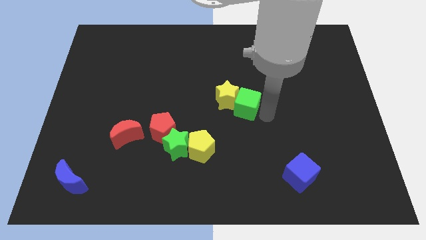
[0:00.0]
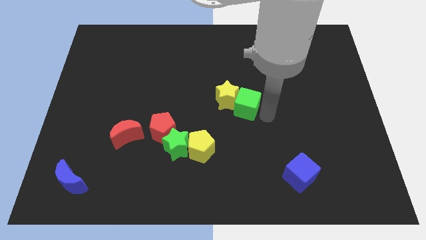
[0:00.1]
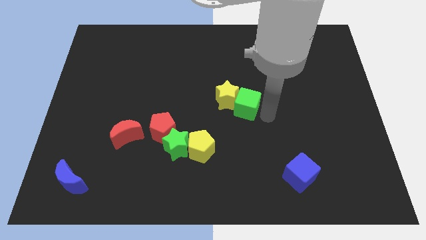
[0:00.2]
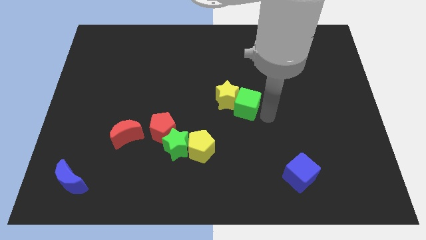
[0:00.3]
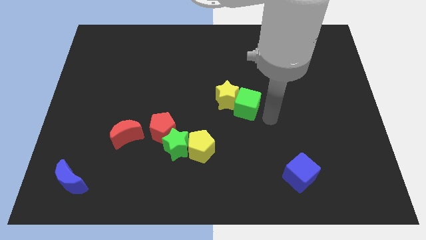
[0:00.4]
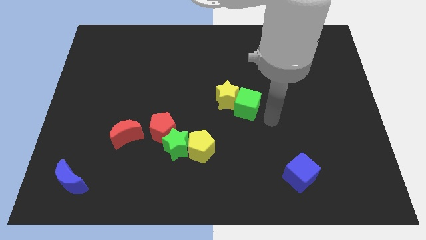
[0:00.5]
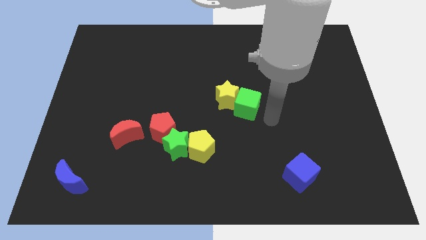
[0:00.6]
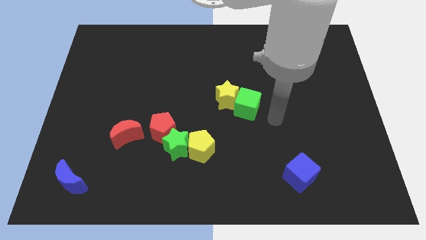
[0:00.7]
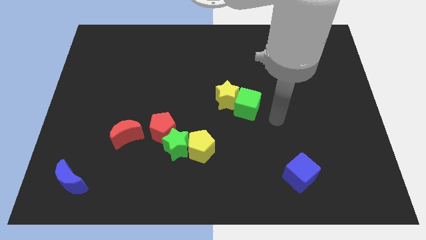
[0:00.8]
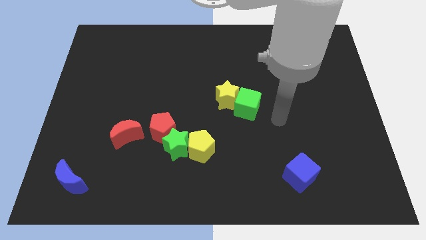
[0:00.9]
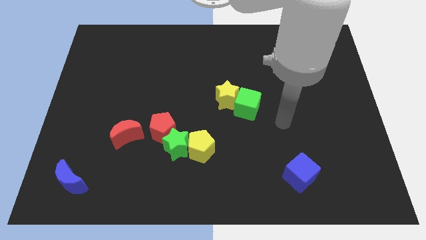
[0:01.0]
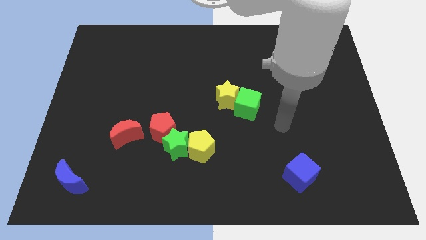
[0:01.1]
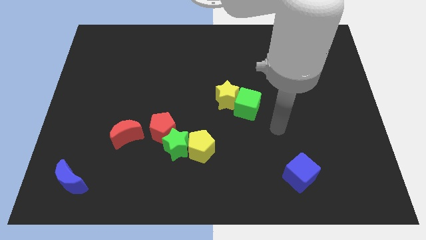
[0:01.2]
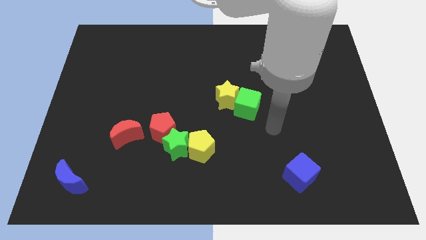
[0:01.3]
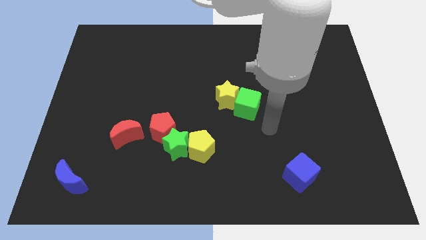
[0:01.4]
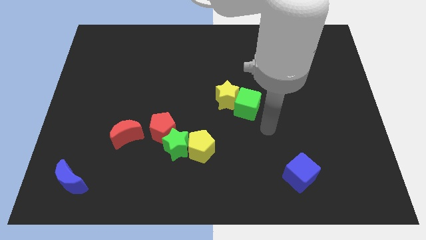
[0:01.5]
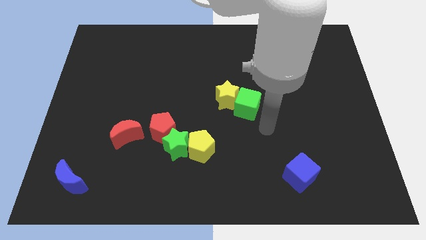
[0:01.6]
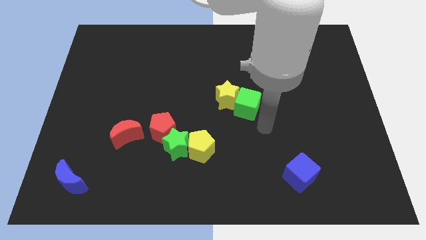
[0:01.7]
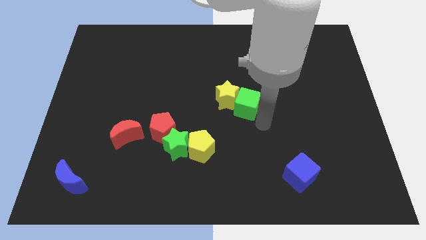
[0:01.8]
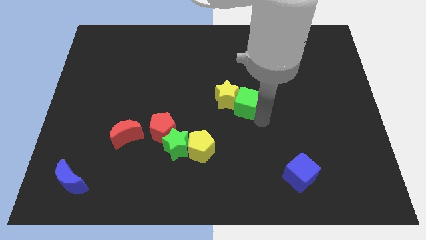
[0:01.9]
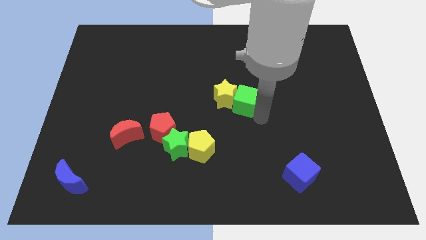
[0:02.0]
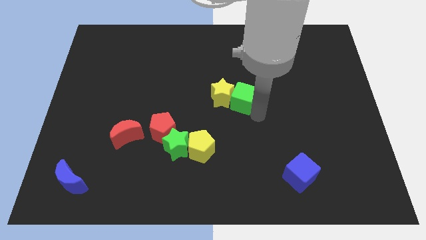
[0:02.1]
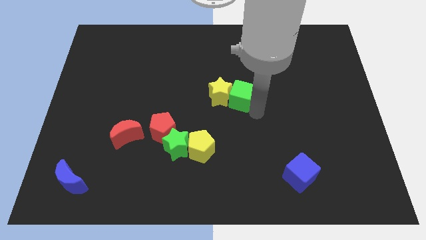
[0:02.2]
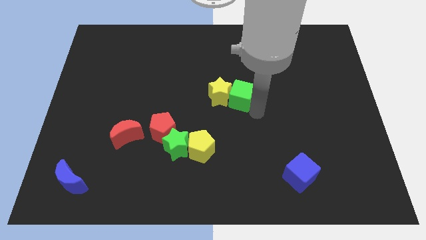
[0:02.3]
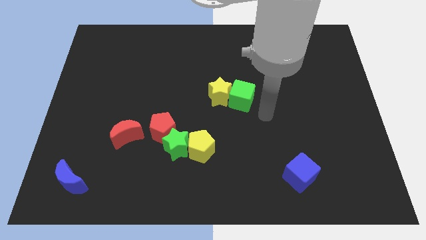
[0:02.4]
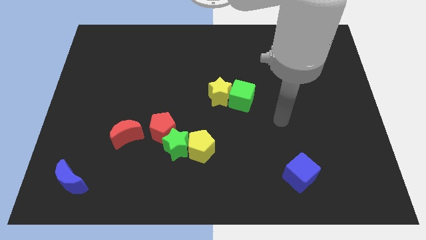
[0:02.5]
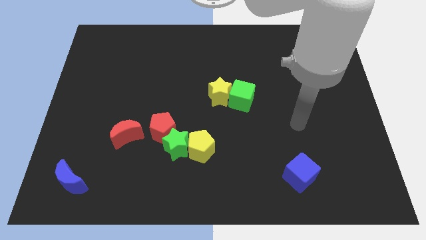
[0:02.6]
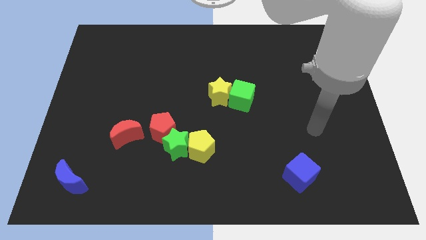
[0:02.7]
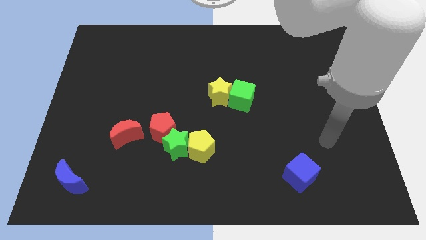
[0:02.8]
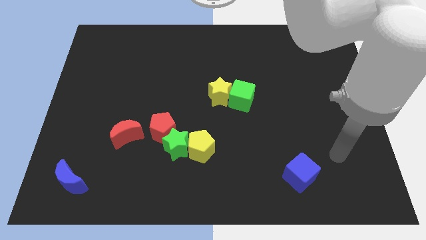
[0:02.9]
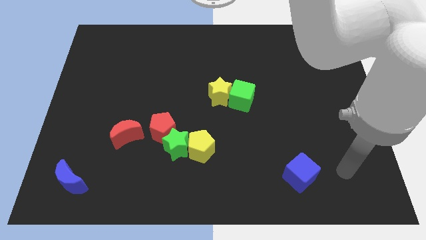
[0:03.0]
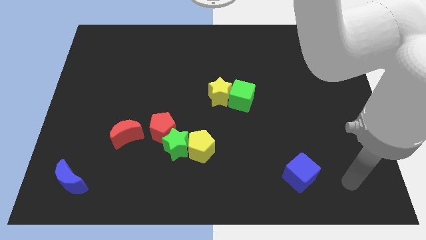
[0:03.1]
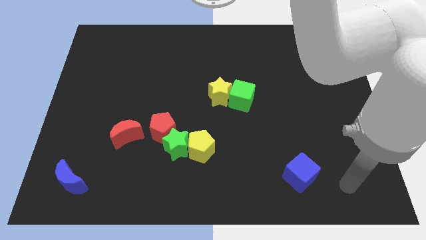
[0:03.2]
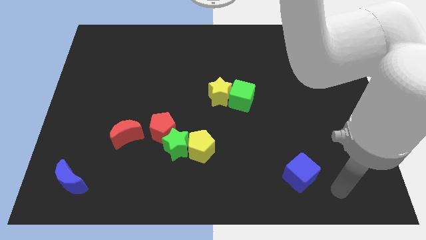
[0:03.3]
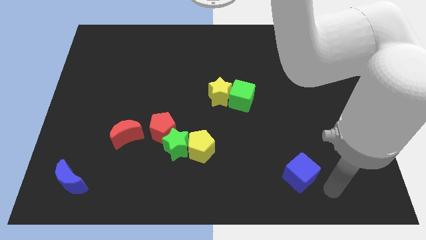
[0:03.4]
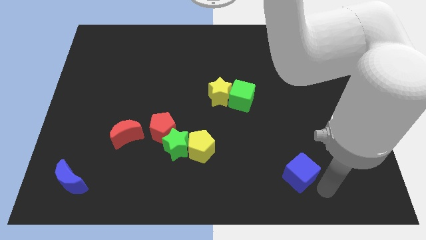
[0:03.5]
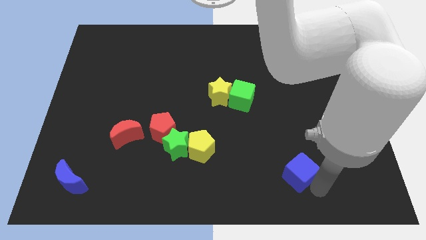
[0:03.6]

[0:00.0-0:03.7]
place the arm near the blue cube

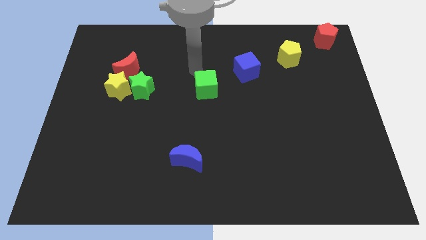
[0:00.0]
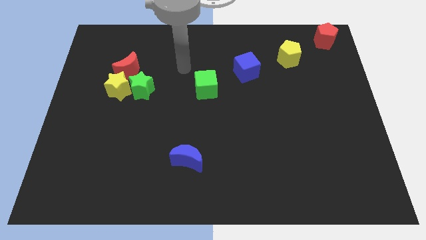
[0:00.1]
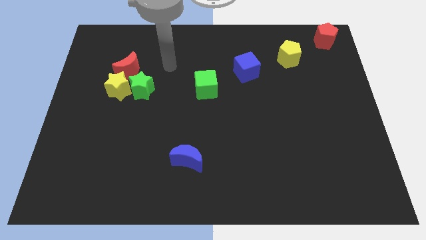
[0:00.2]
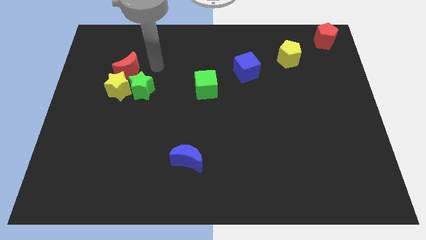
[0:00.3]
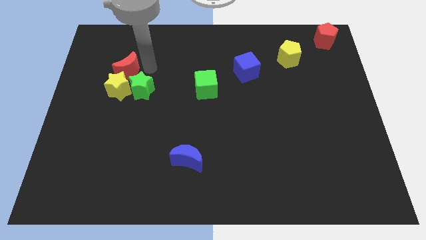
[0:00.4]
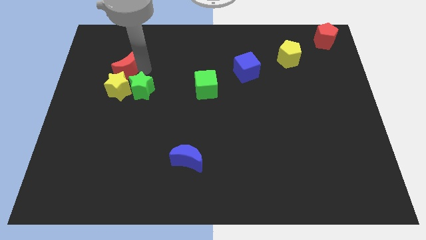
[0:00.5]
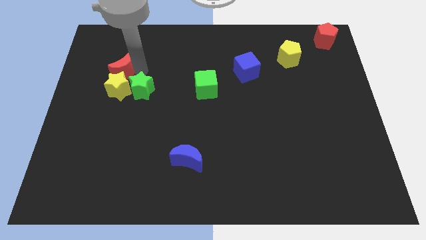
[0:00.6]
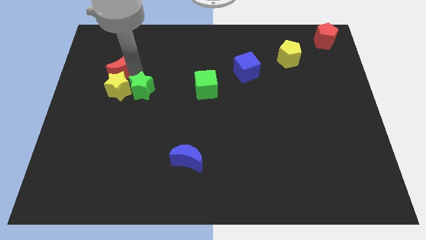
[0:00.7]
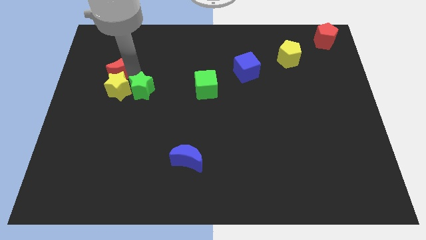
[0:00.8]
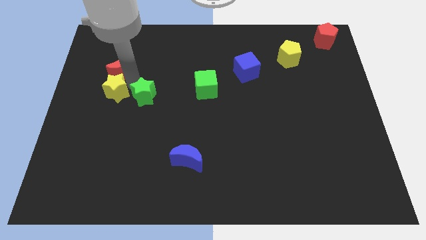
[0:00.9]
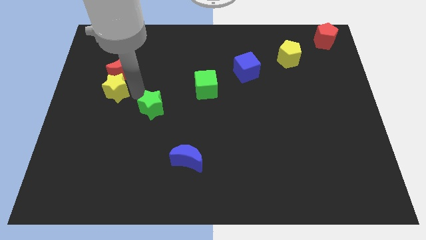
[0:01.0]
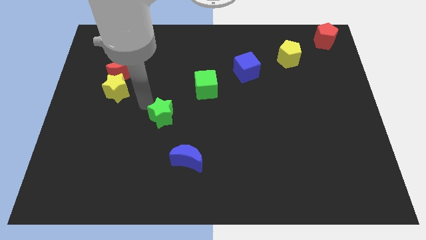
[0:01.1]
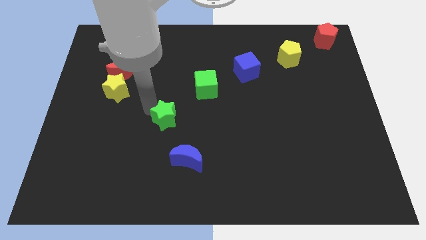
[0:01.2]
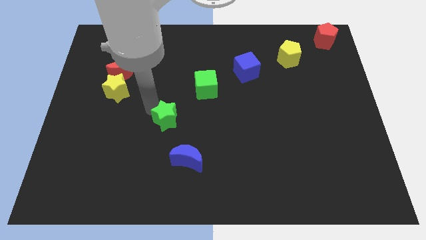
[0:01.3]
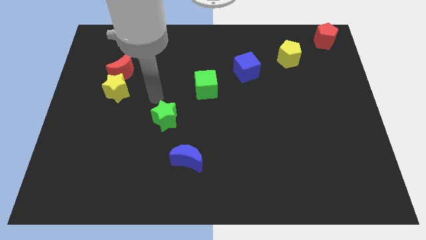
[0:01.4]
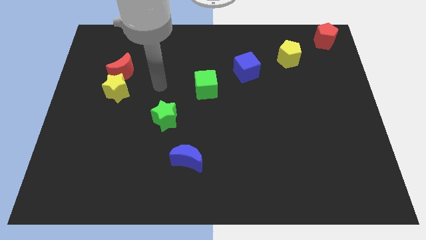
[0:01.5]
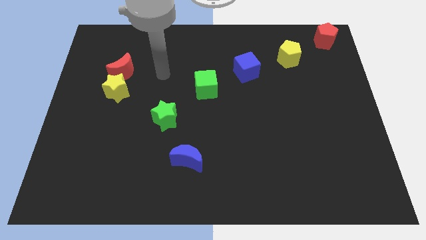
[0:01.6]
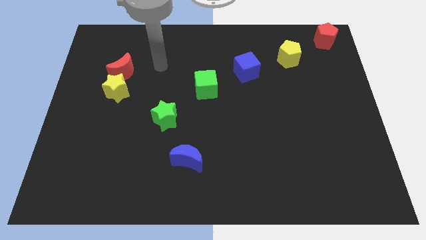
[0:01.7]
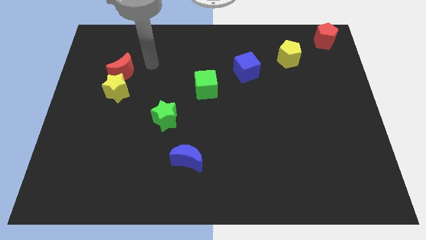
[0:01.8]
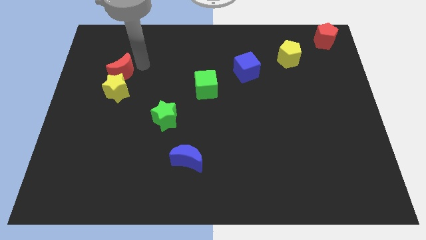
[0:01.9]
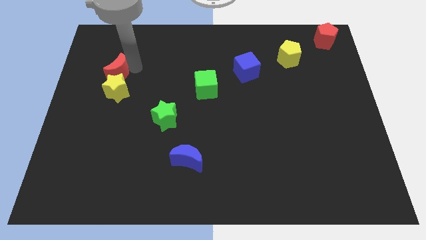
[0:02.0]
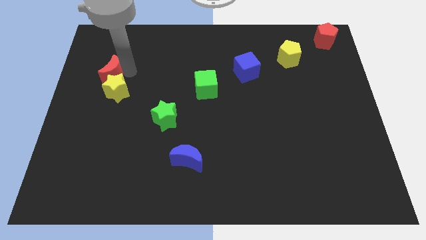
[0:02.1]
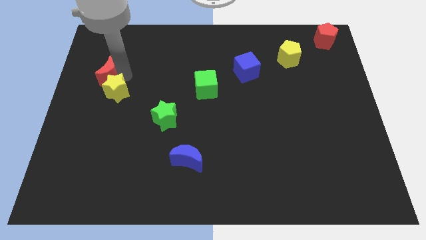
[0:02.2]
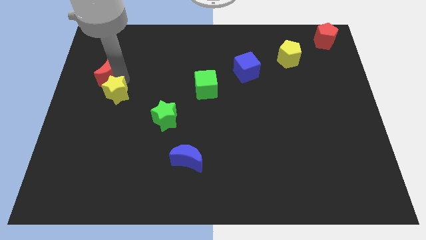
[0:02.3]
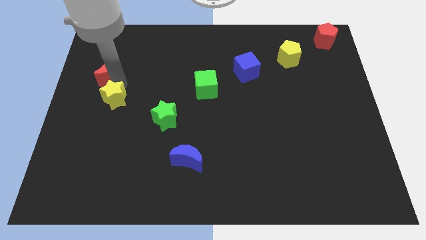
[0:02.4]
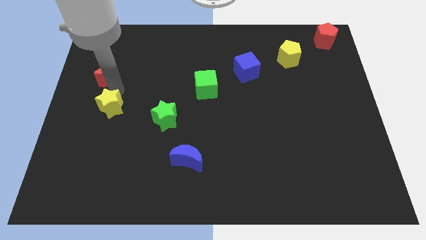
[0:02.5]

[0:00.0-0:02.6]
separate the green star from the red crescent and yellow star

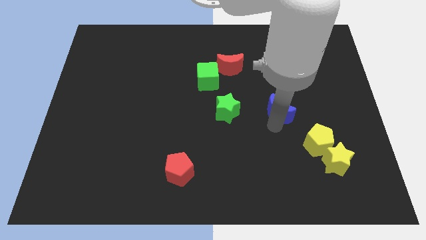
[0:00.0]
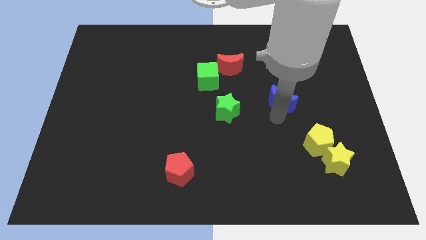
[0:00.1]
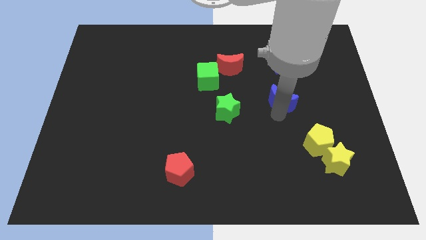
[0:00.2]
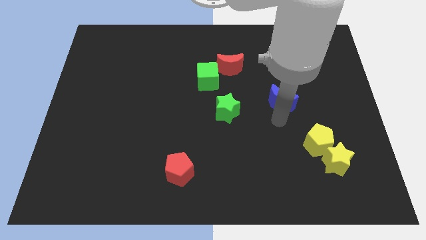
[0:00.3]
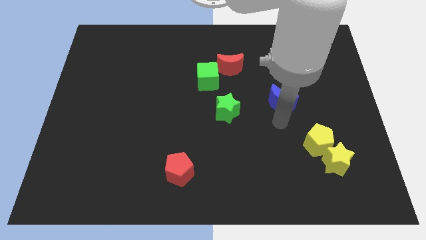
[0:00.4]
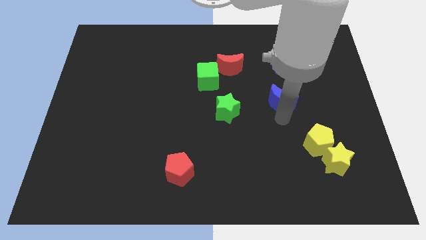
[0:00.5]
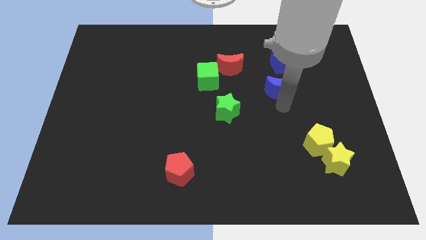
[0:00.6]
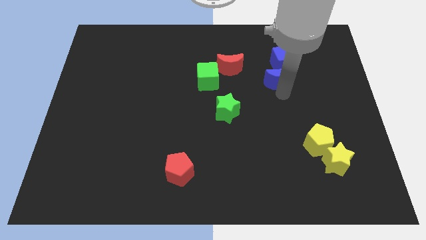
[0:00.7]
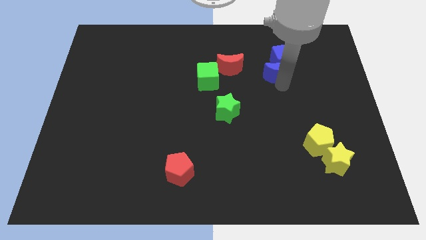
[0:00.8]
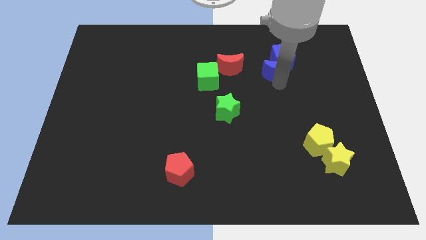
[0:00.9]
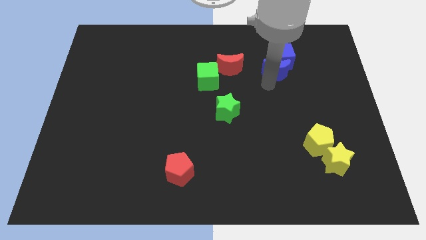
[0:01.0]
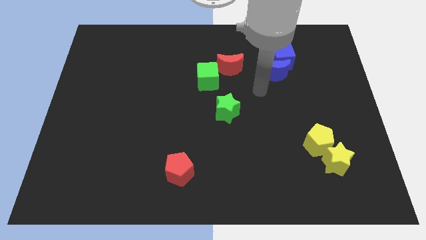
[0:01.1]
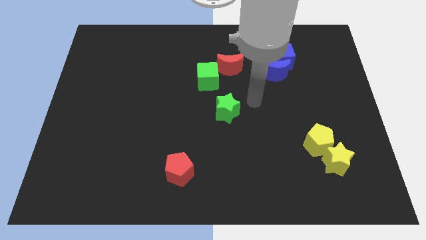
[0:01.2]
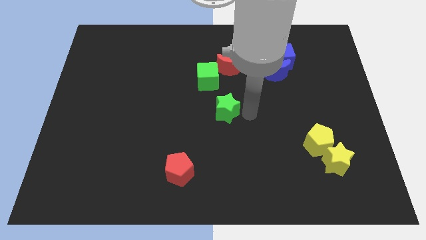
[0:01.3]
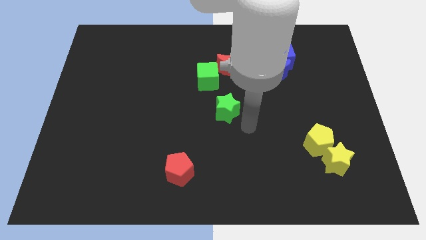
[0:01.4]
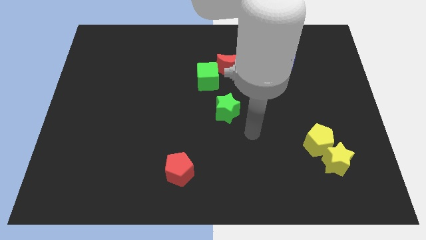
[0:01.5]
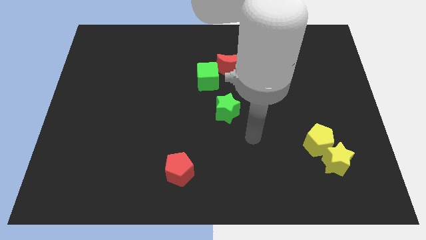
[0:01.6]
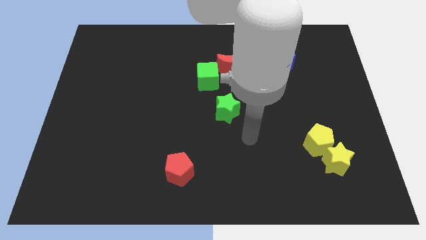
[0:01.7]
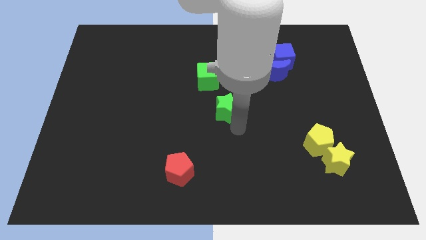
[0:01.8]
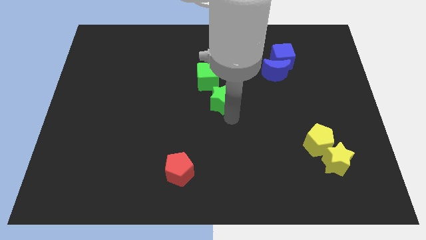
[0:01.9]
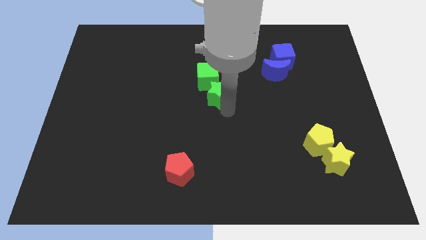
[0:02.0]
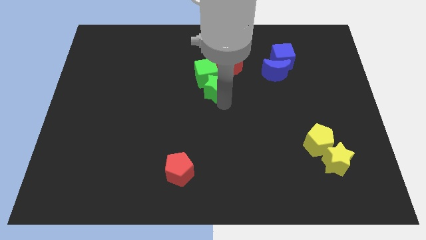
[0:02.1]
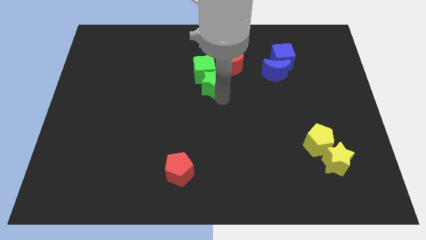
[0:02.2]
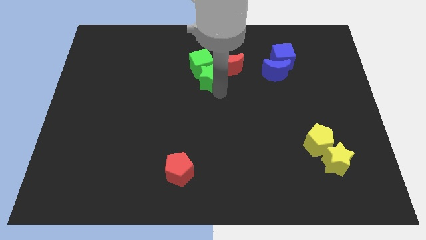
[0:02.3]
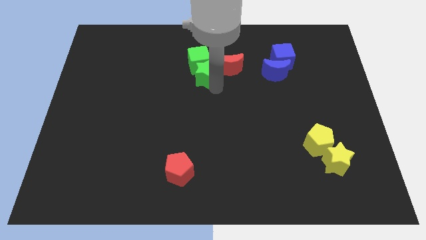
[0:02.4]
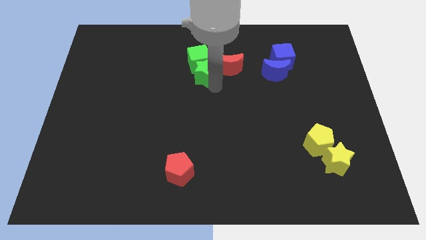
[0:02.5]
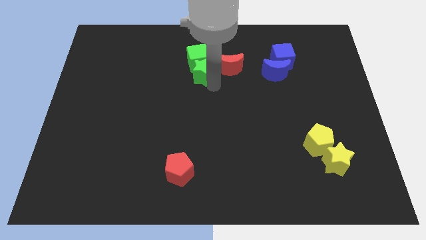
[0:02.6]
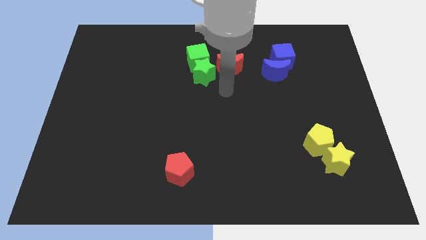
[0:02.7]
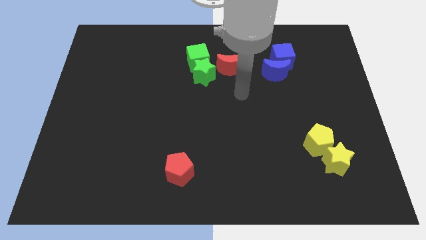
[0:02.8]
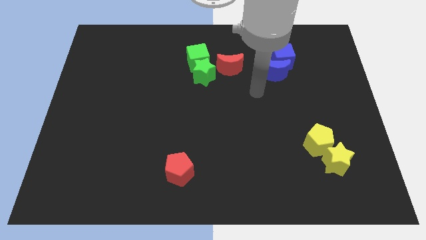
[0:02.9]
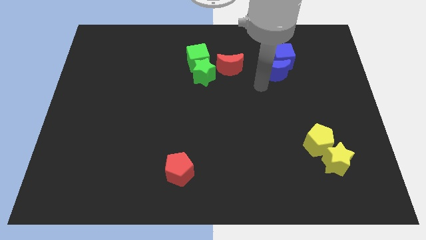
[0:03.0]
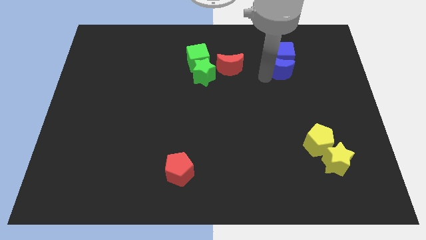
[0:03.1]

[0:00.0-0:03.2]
make the blue blocks and green blocks together
